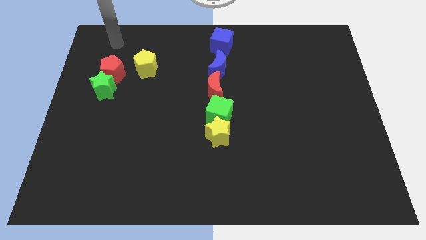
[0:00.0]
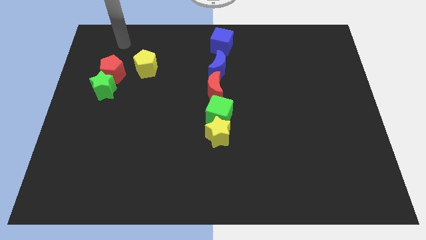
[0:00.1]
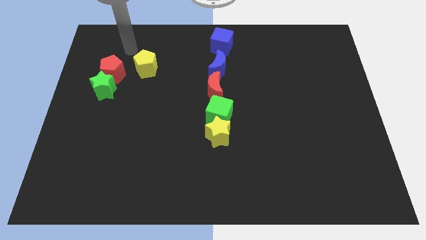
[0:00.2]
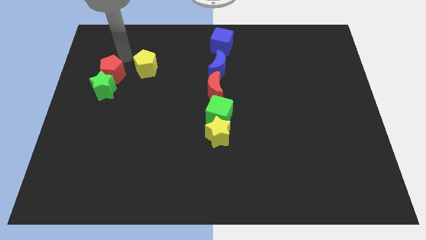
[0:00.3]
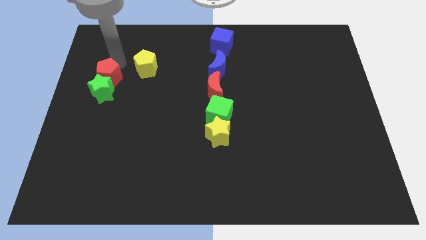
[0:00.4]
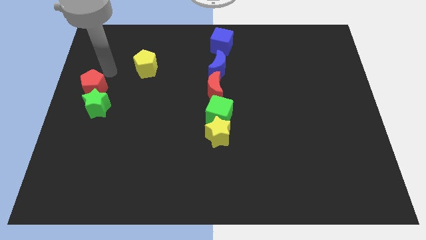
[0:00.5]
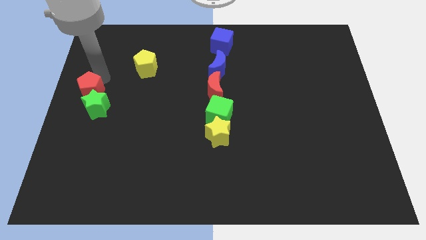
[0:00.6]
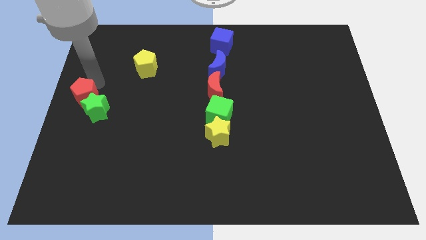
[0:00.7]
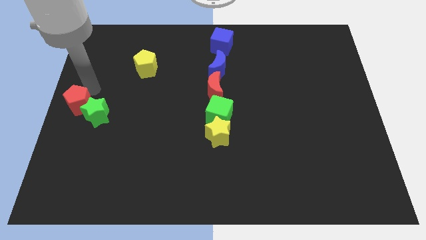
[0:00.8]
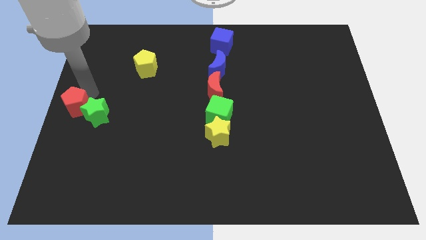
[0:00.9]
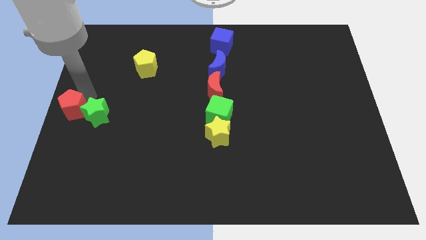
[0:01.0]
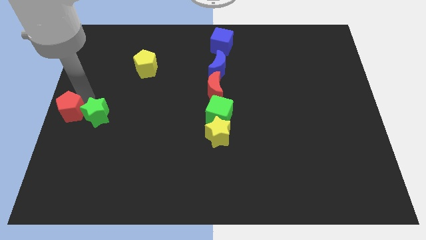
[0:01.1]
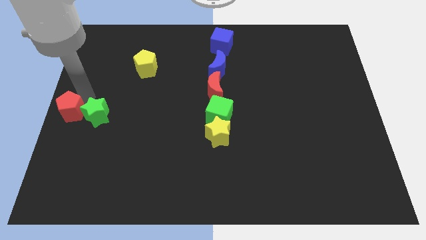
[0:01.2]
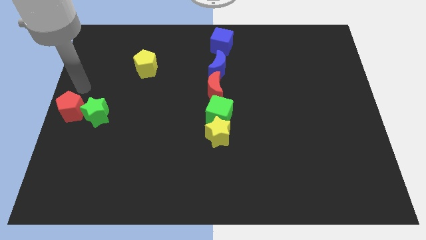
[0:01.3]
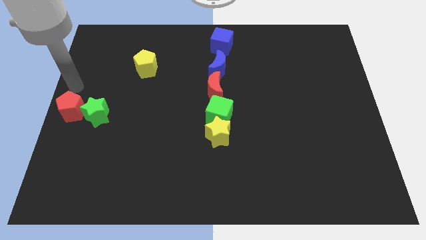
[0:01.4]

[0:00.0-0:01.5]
push red pentagon slightly towards down

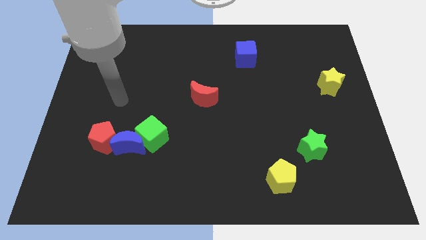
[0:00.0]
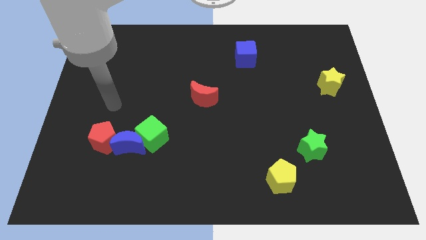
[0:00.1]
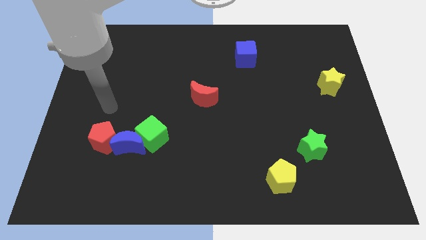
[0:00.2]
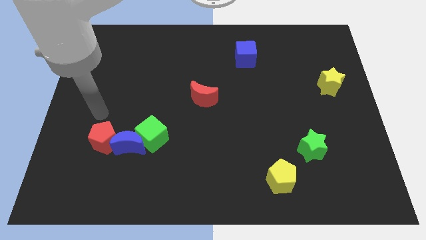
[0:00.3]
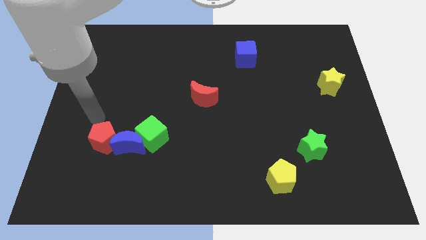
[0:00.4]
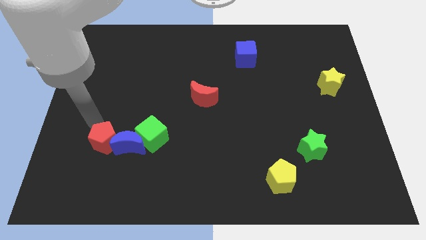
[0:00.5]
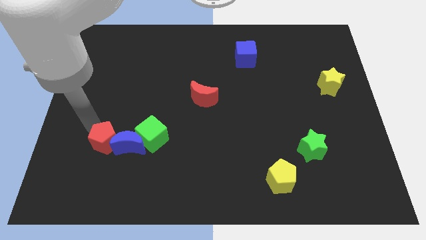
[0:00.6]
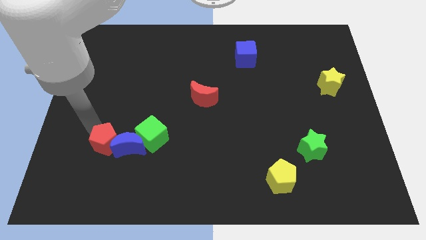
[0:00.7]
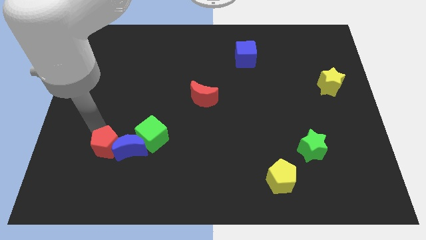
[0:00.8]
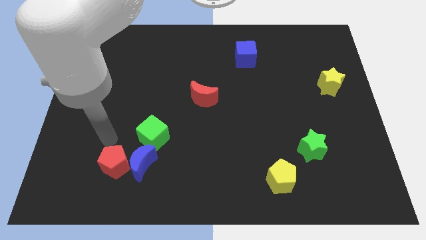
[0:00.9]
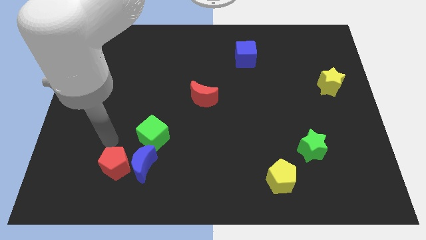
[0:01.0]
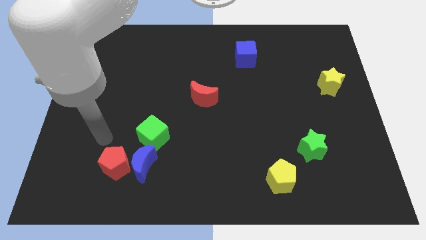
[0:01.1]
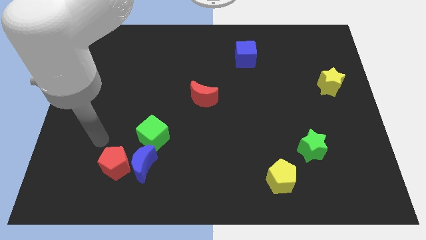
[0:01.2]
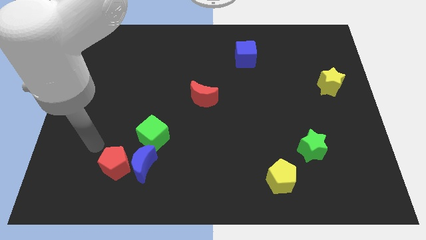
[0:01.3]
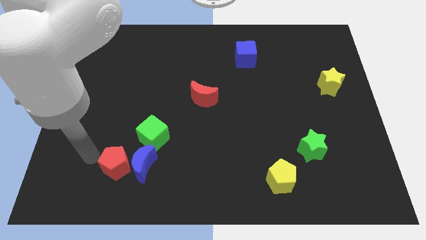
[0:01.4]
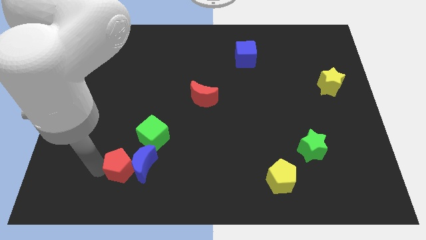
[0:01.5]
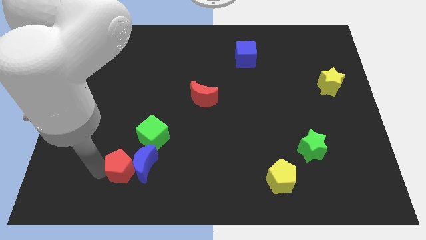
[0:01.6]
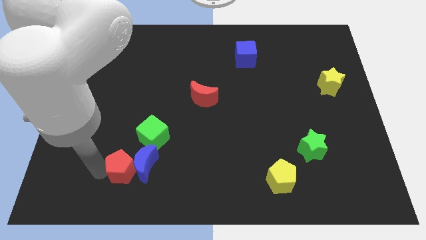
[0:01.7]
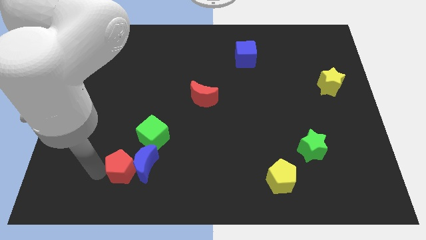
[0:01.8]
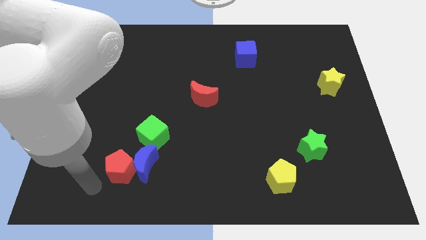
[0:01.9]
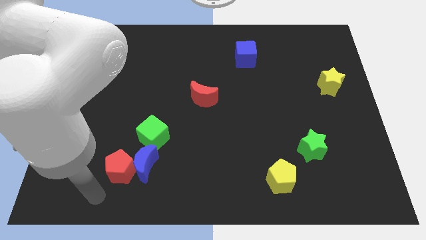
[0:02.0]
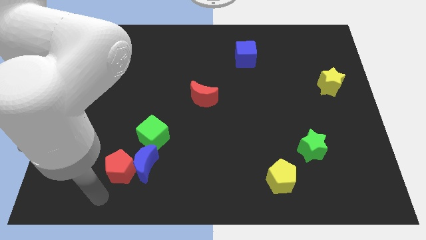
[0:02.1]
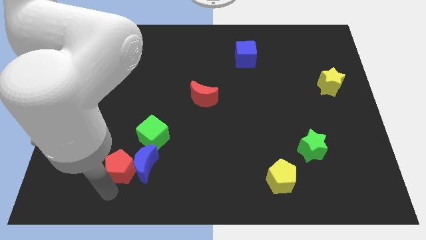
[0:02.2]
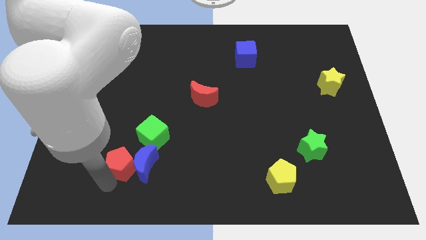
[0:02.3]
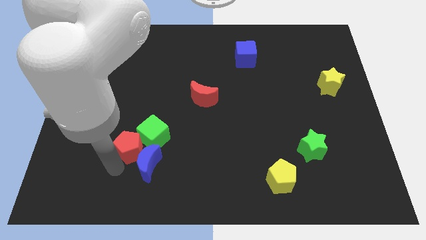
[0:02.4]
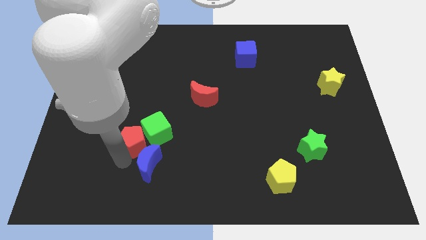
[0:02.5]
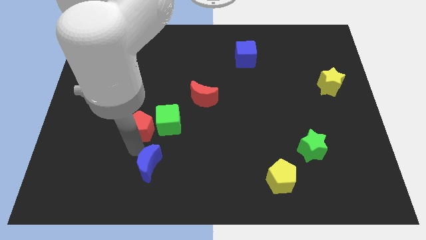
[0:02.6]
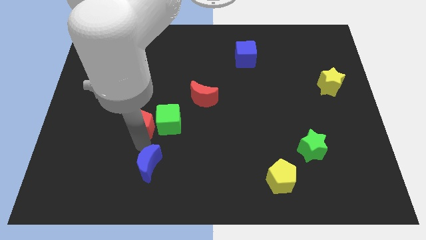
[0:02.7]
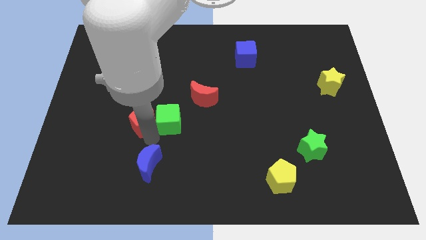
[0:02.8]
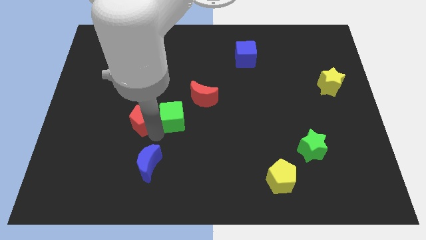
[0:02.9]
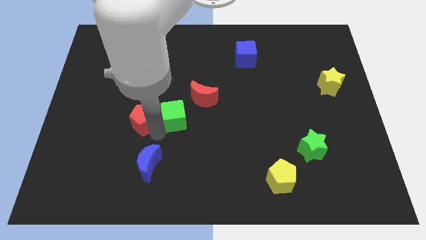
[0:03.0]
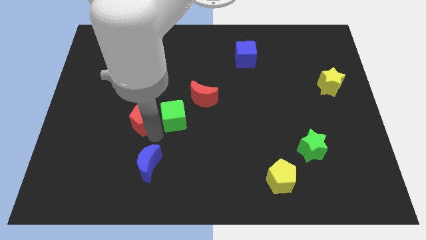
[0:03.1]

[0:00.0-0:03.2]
move red pentagon left beside the green cube

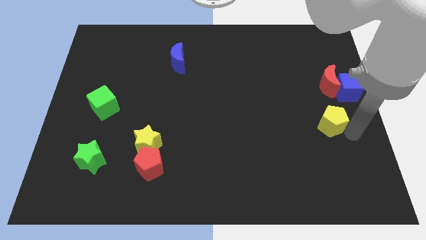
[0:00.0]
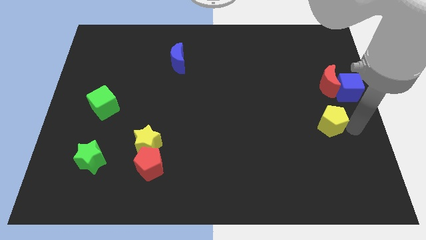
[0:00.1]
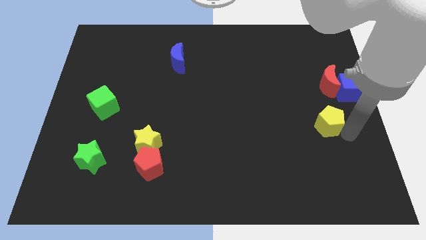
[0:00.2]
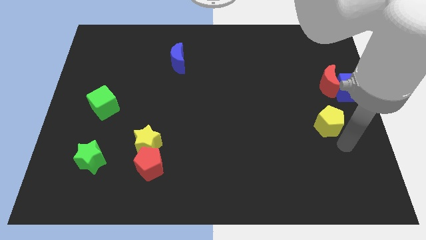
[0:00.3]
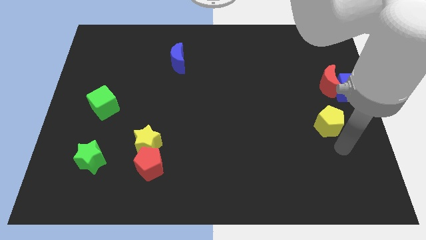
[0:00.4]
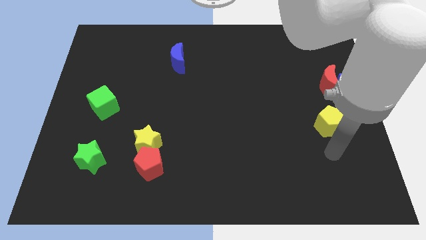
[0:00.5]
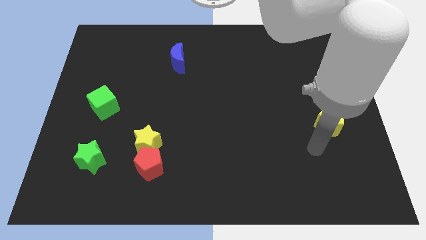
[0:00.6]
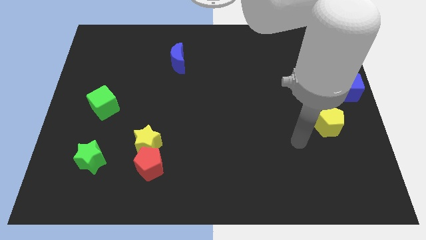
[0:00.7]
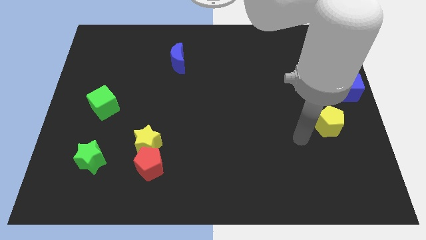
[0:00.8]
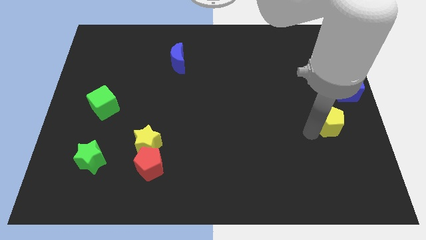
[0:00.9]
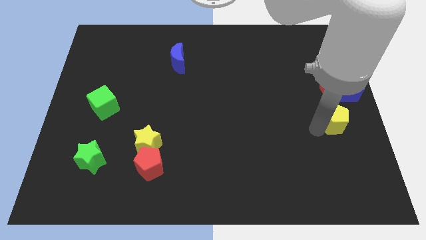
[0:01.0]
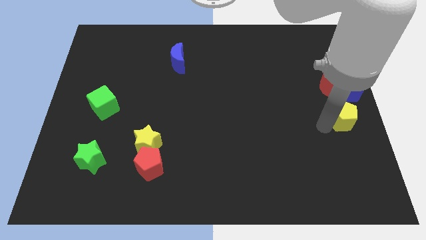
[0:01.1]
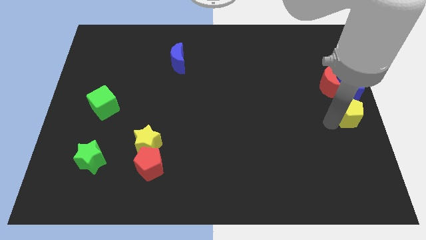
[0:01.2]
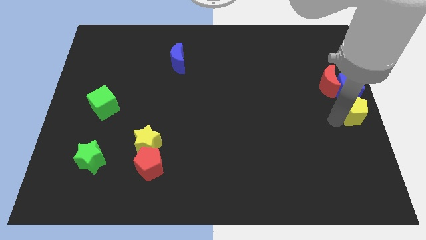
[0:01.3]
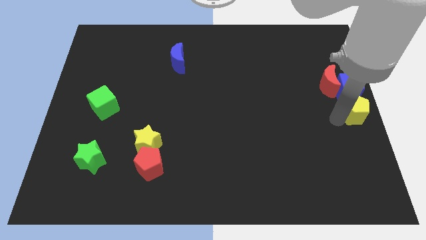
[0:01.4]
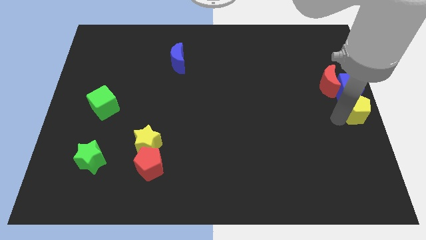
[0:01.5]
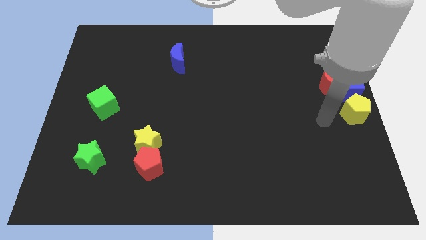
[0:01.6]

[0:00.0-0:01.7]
put yellow pentagon below blue cube

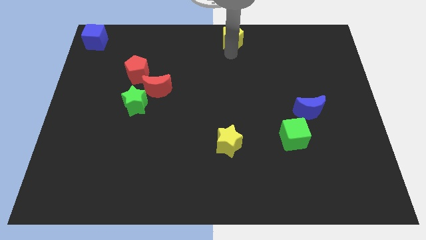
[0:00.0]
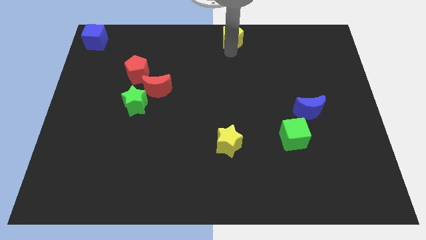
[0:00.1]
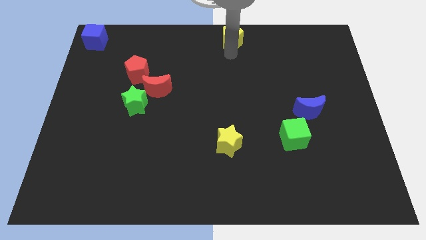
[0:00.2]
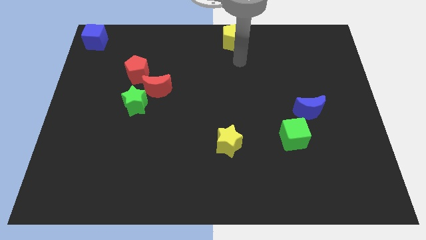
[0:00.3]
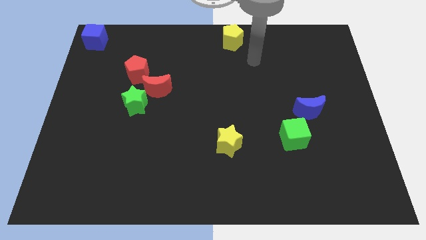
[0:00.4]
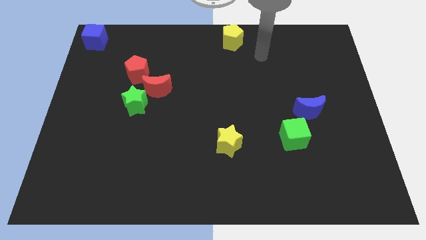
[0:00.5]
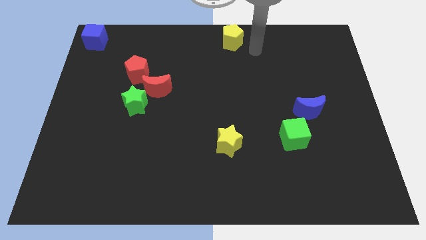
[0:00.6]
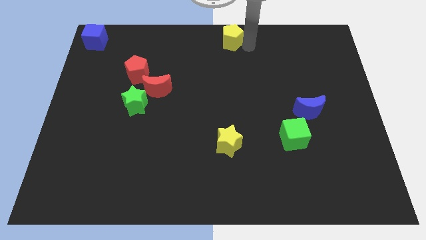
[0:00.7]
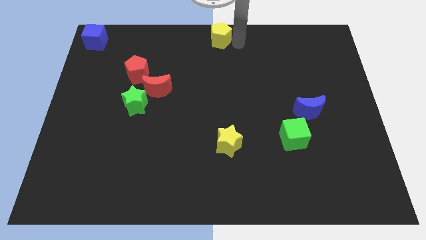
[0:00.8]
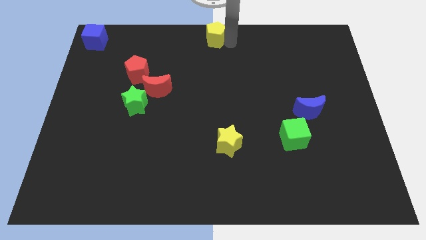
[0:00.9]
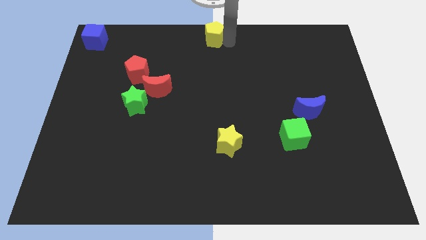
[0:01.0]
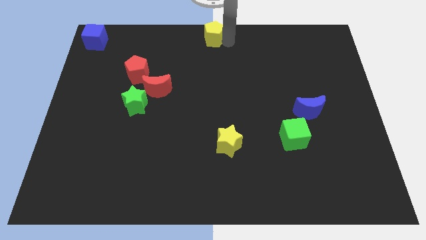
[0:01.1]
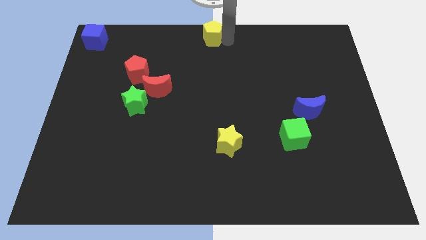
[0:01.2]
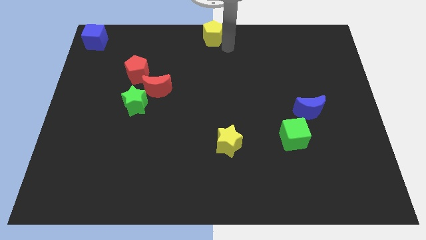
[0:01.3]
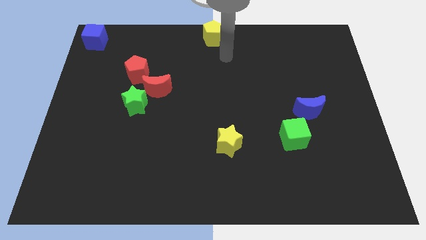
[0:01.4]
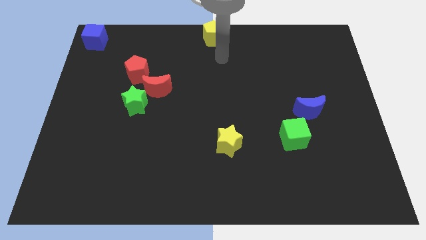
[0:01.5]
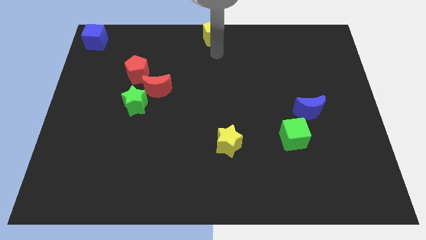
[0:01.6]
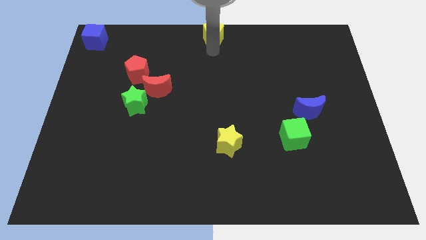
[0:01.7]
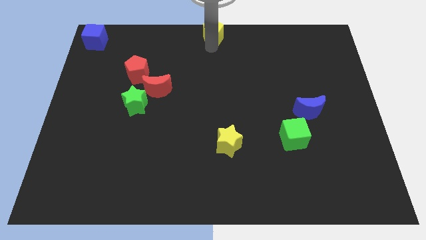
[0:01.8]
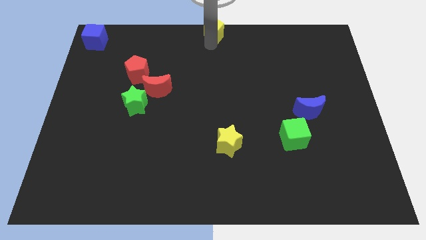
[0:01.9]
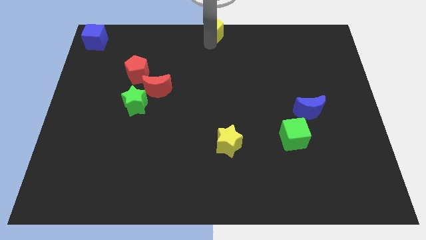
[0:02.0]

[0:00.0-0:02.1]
place the yellow pentagon at the top center of the board

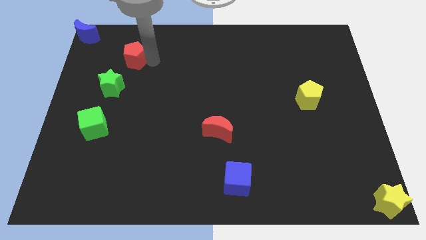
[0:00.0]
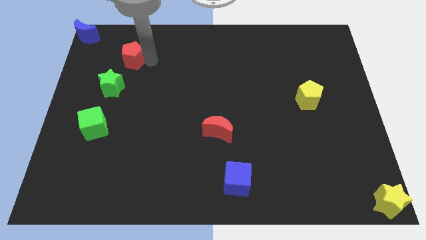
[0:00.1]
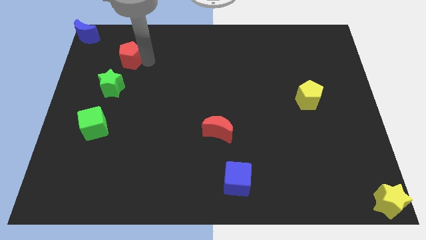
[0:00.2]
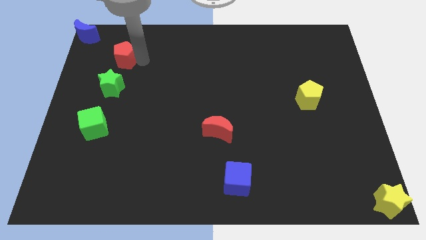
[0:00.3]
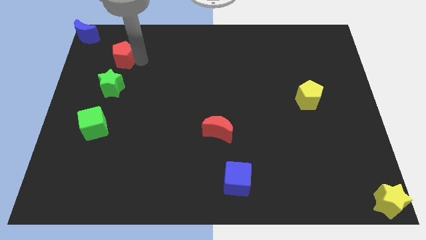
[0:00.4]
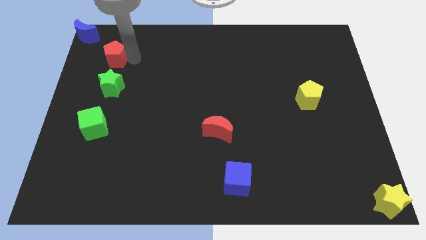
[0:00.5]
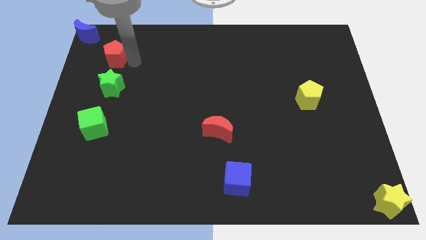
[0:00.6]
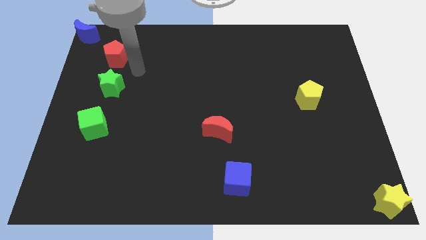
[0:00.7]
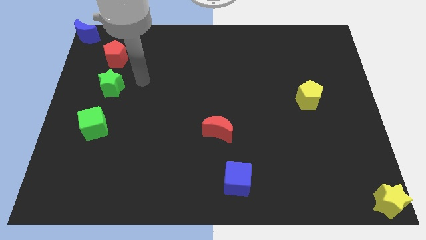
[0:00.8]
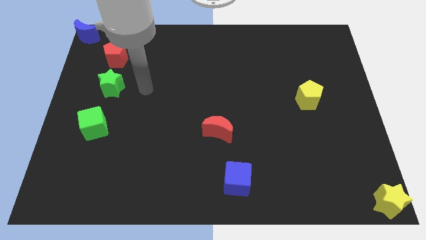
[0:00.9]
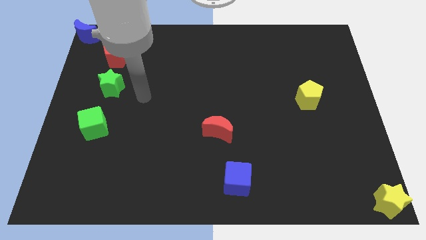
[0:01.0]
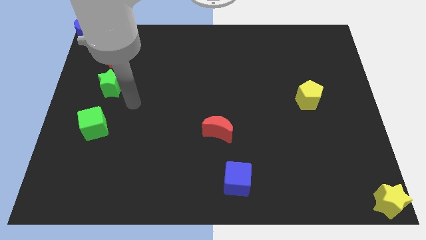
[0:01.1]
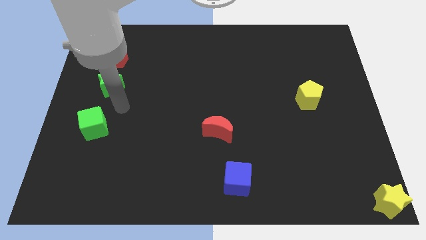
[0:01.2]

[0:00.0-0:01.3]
place red pentagon at the top of green star
